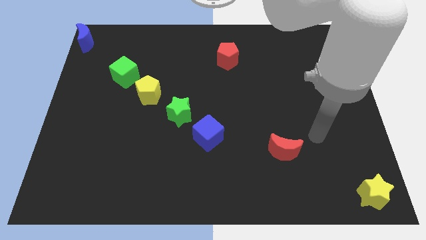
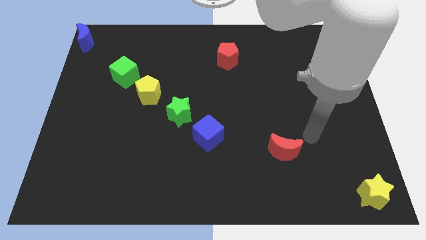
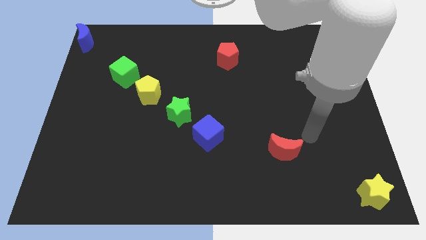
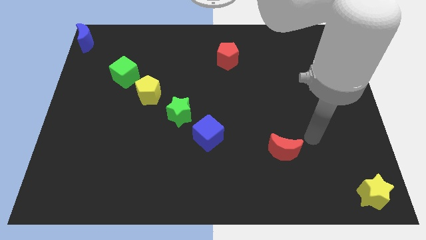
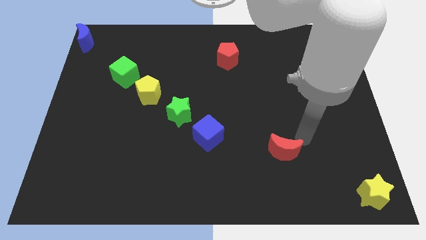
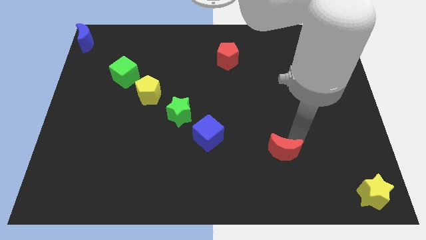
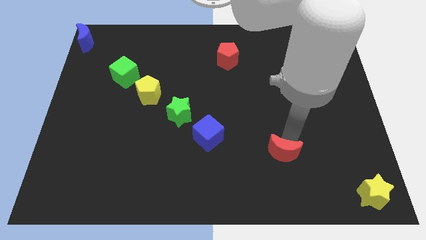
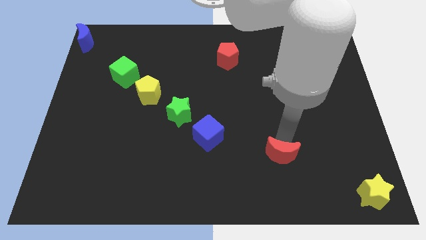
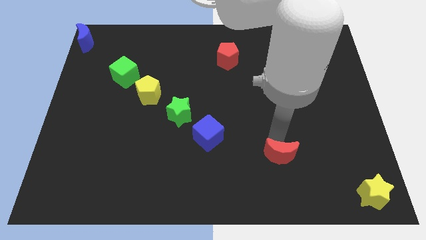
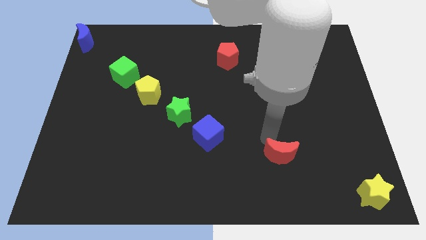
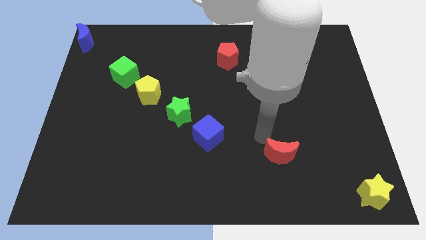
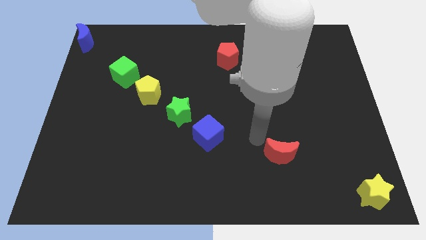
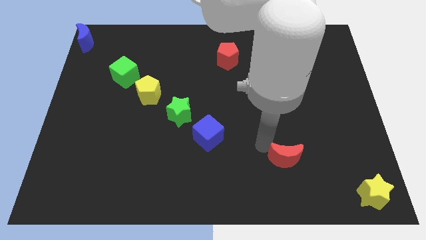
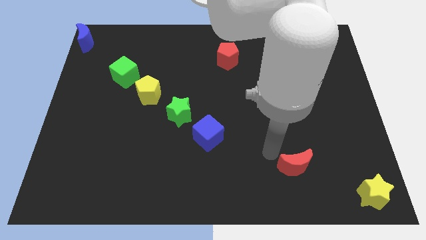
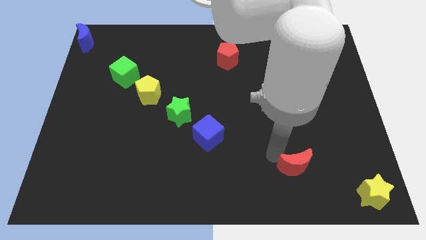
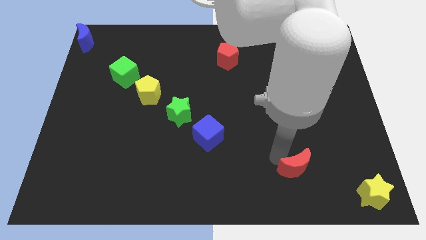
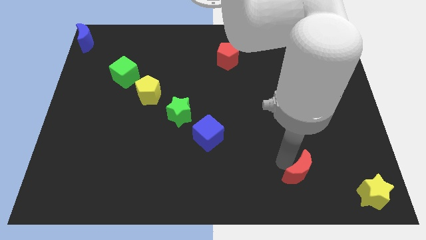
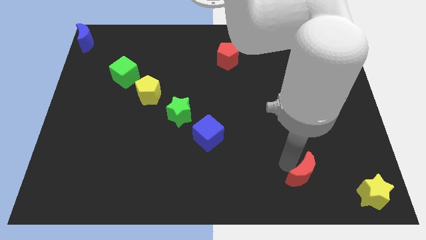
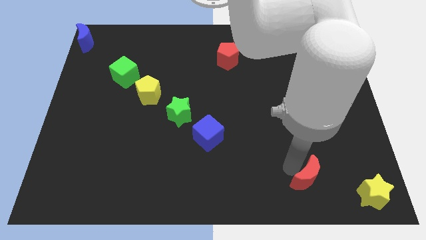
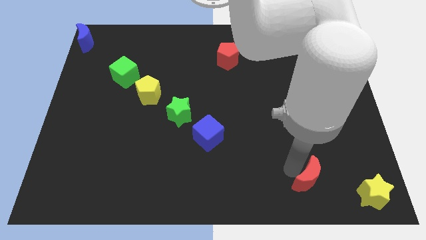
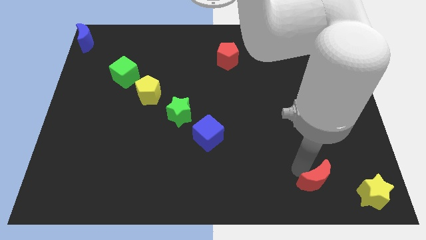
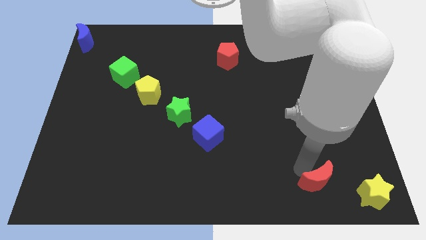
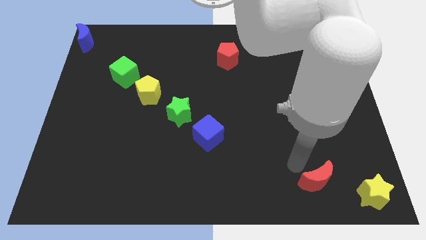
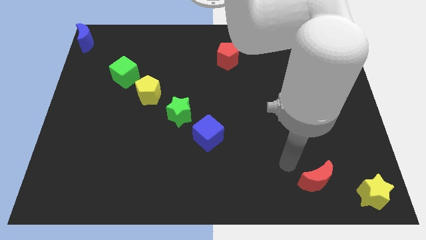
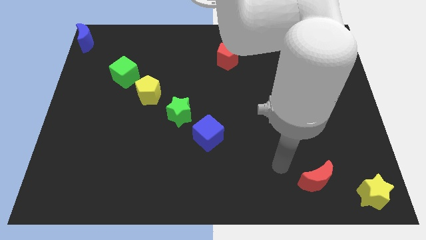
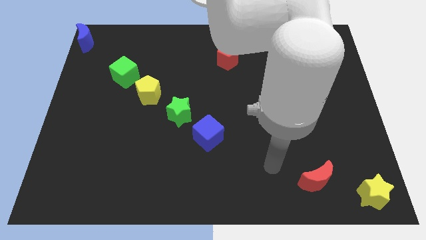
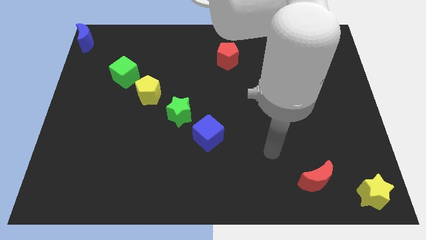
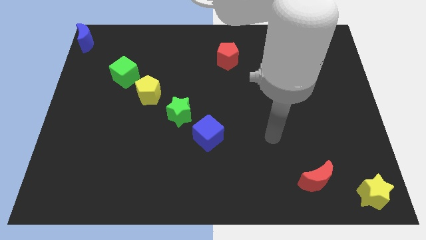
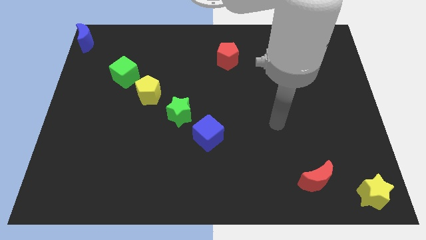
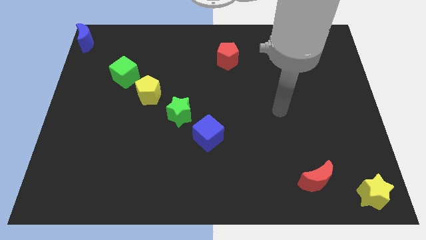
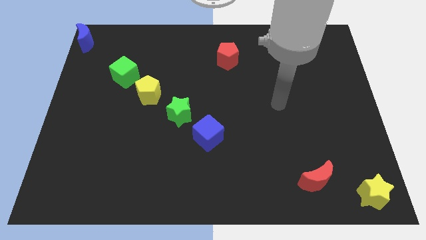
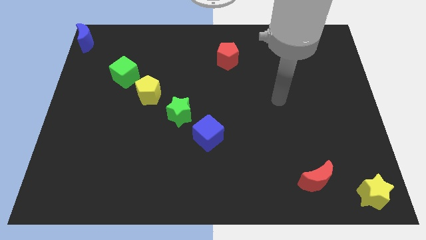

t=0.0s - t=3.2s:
slide the red moon towards the yellow star

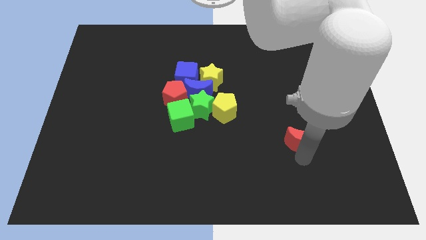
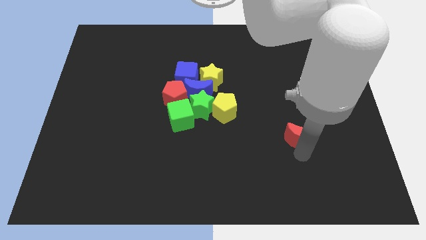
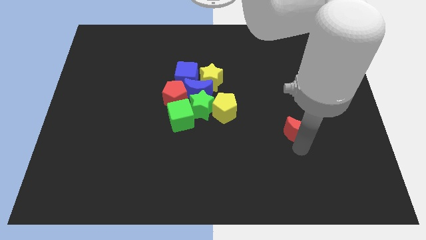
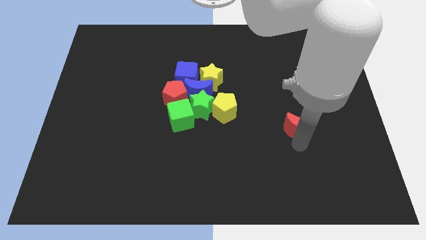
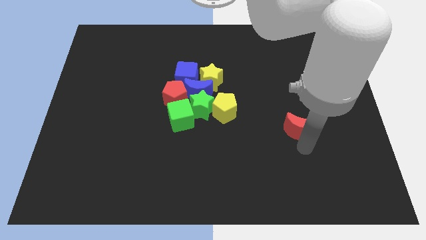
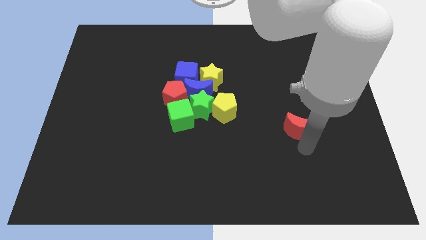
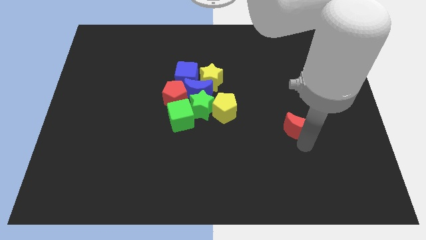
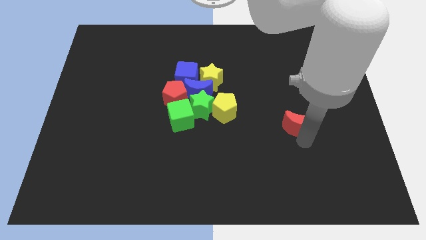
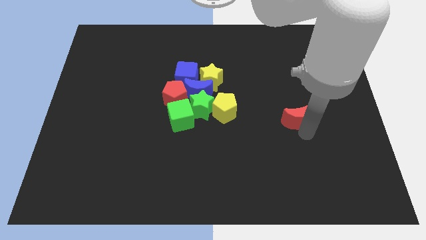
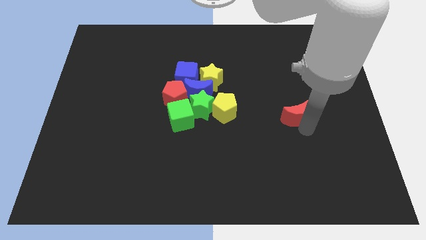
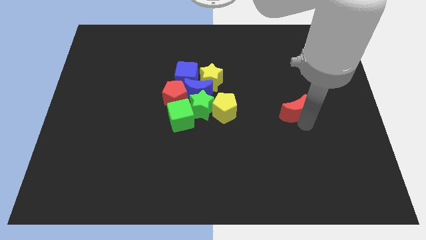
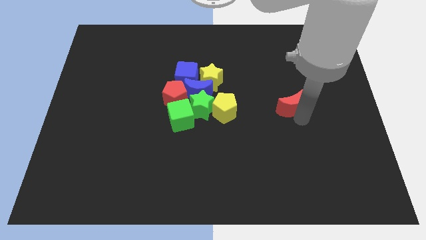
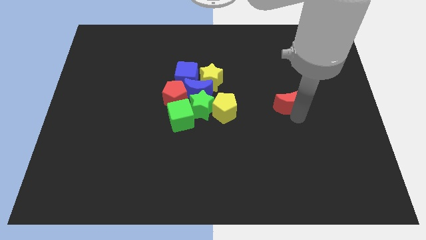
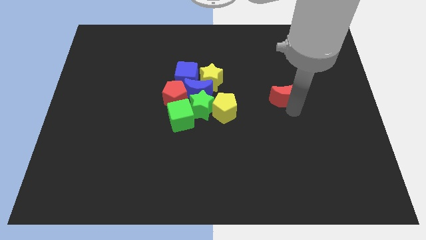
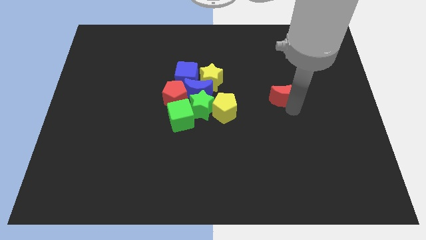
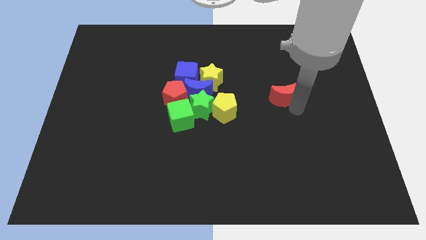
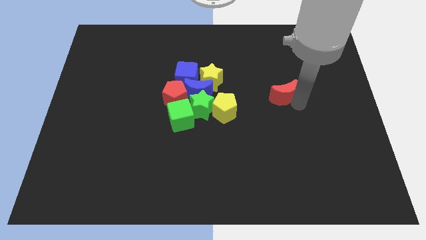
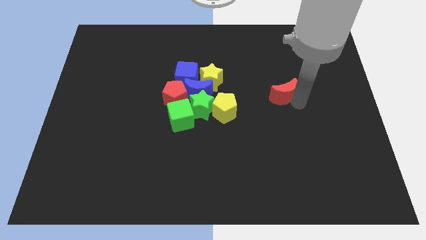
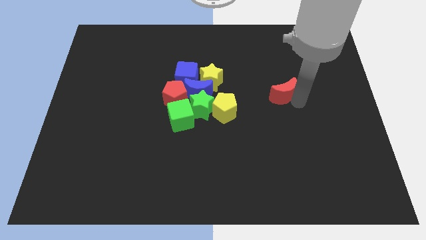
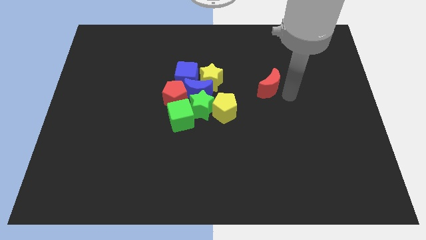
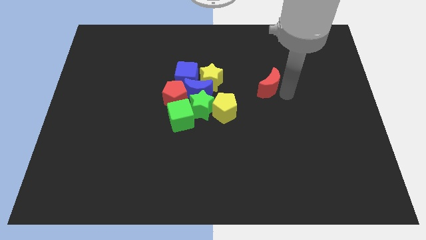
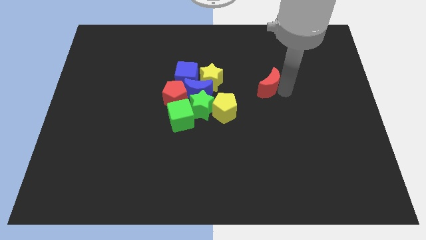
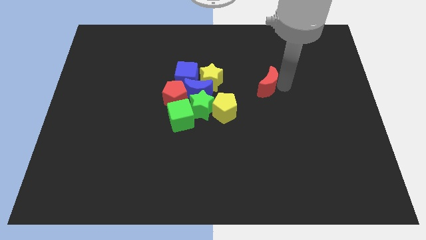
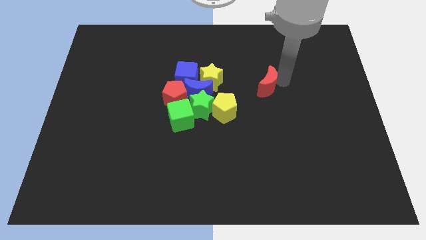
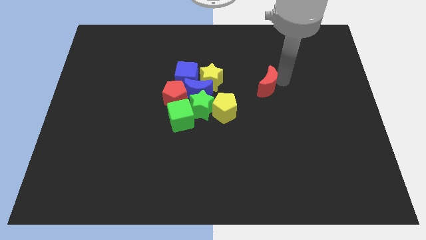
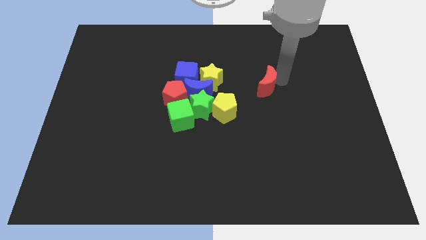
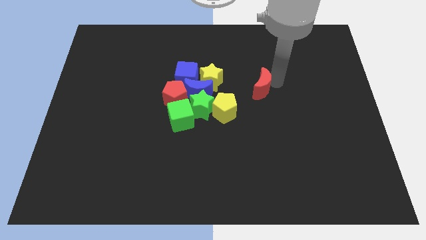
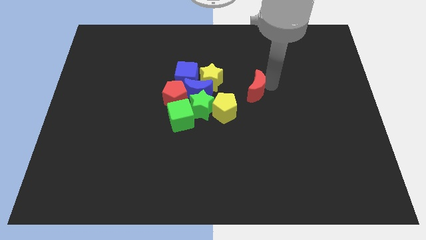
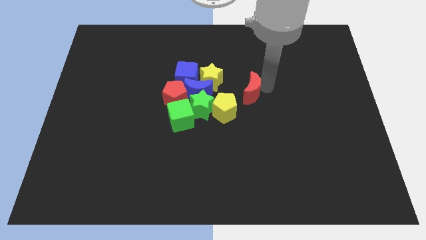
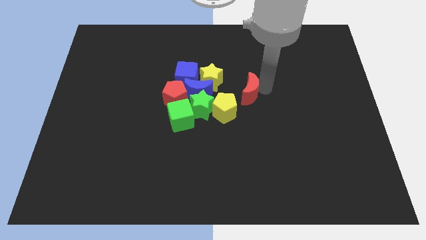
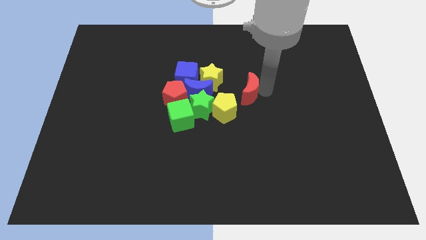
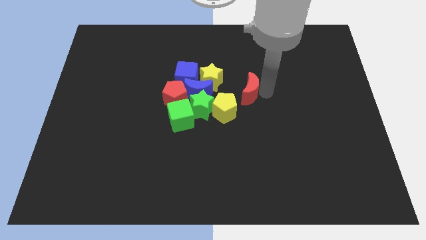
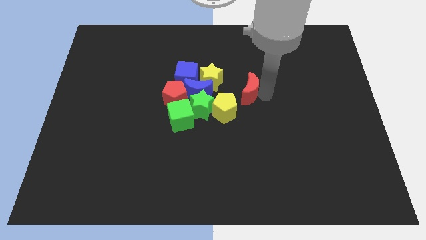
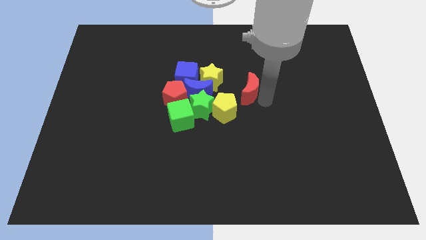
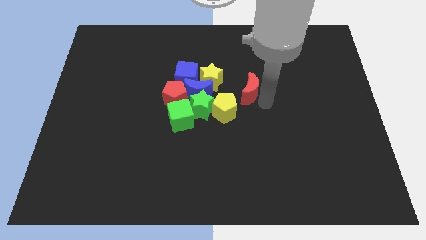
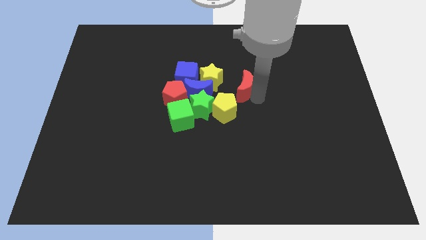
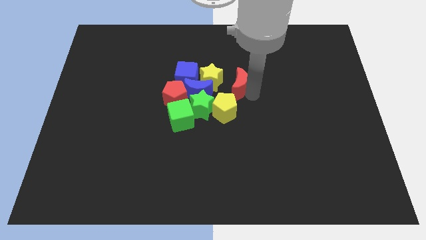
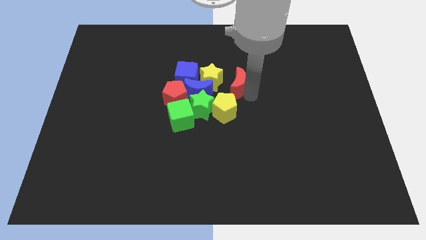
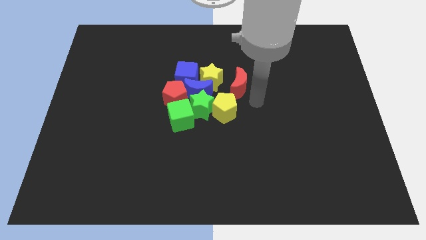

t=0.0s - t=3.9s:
push the red moon towards the yellow blocks

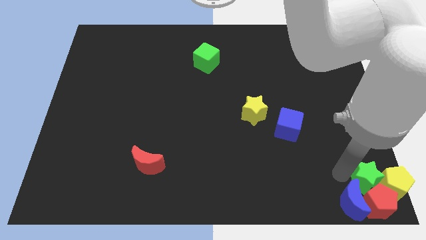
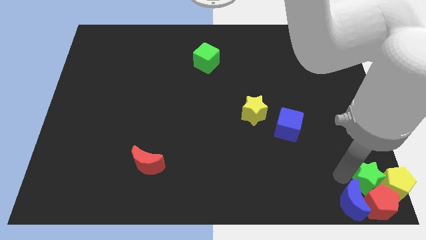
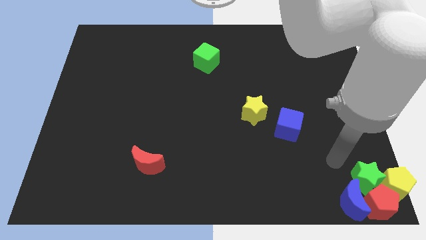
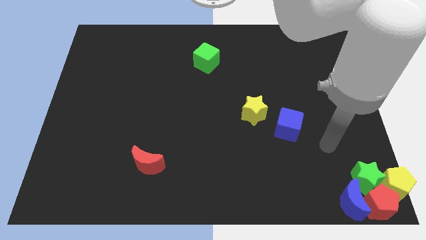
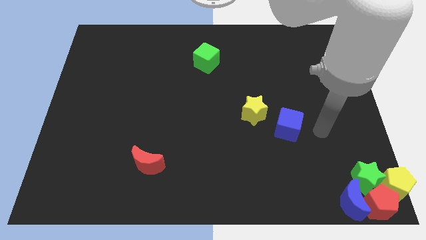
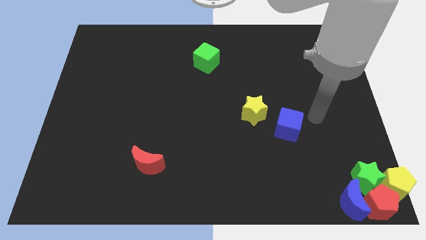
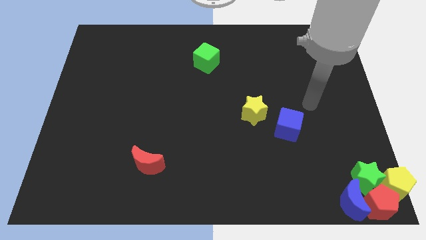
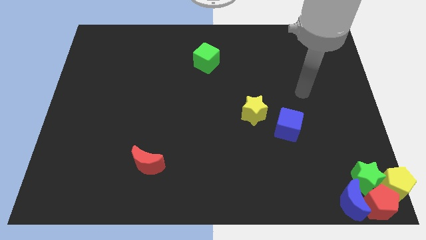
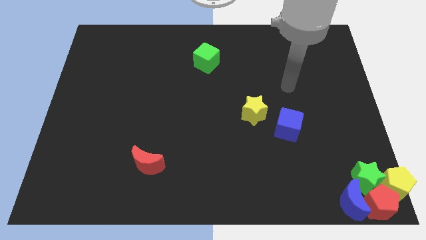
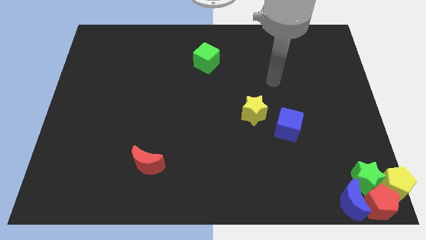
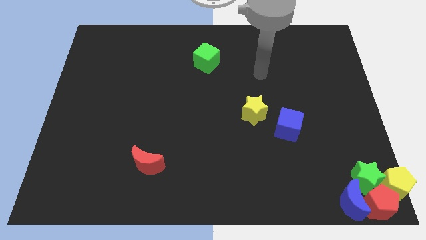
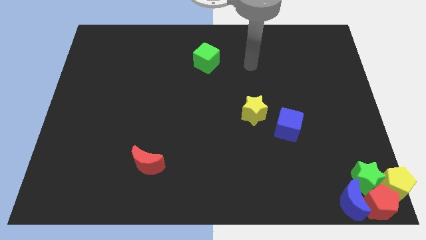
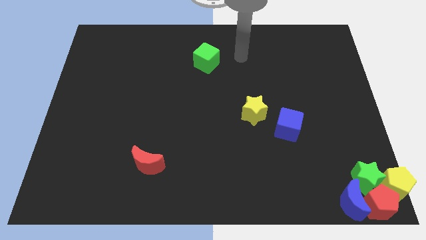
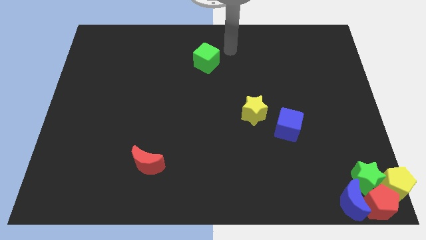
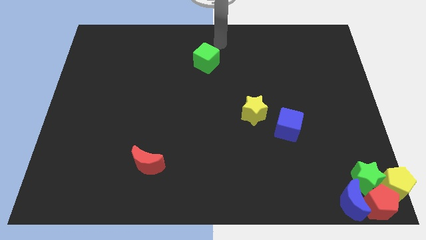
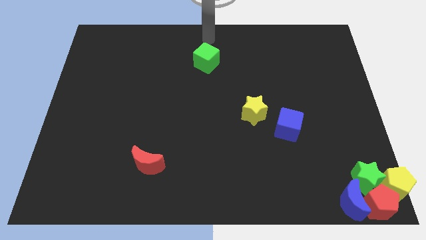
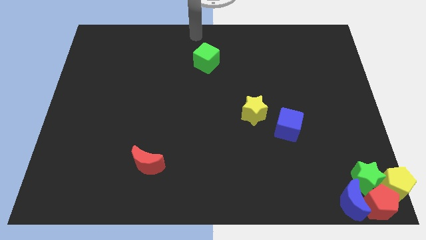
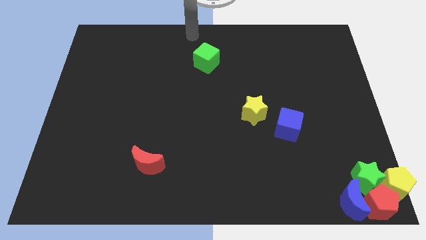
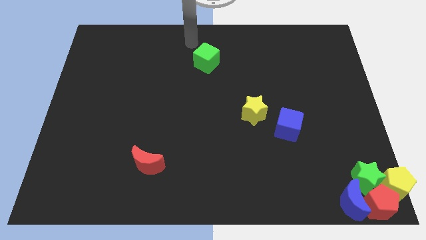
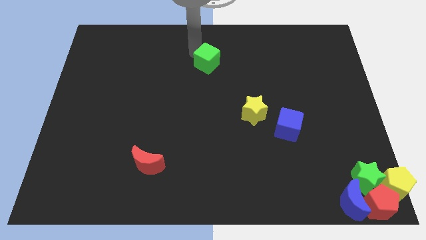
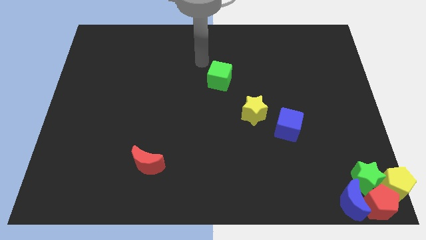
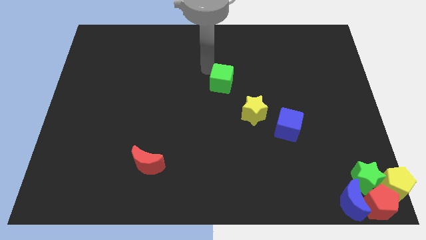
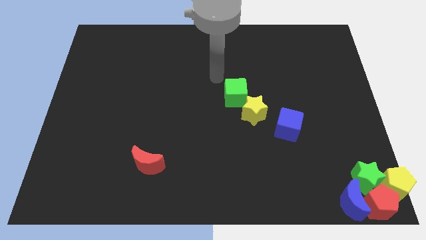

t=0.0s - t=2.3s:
push the green cube downward
